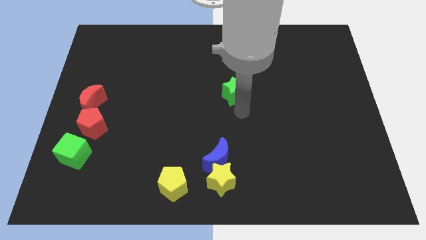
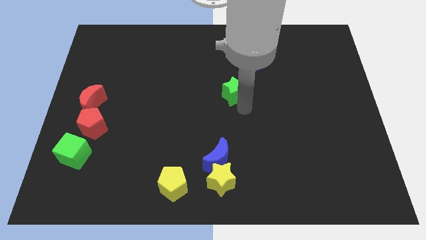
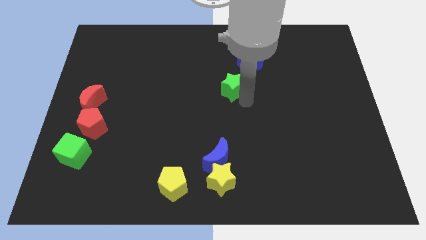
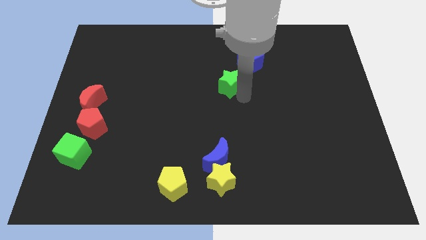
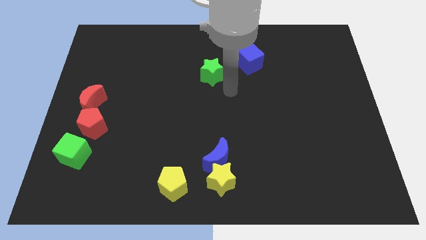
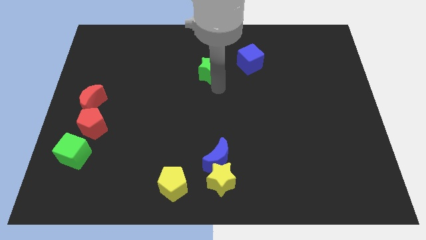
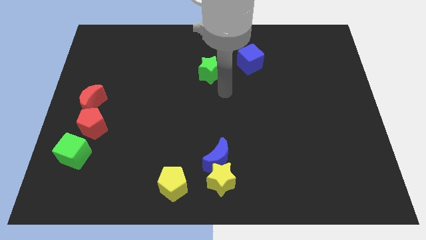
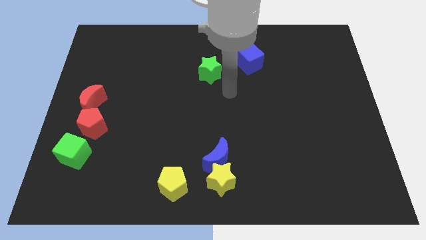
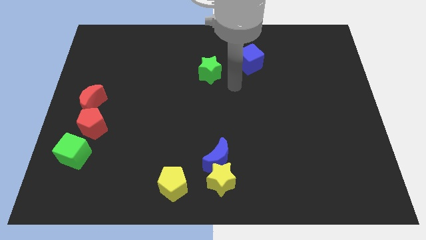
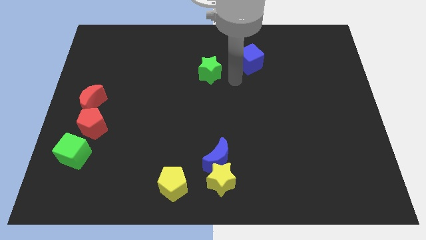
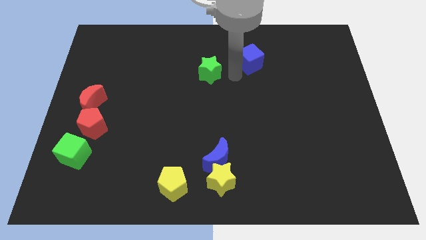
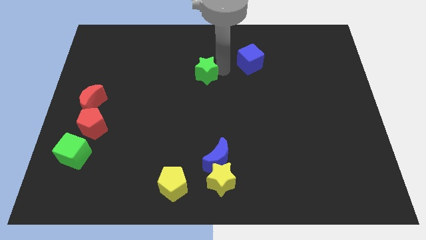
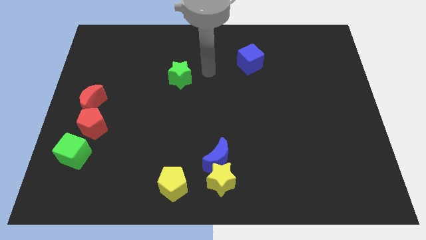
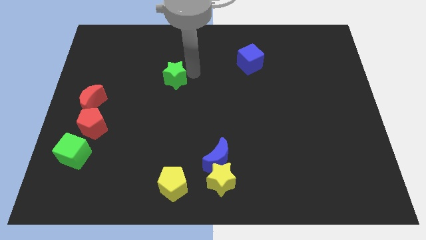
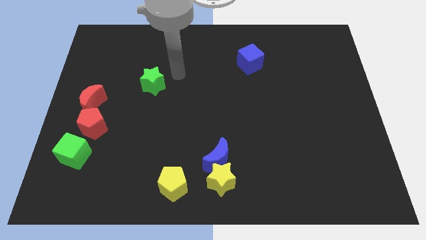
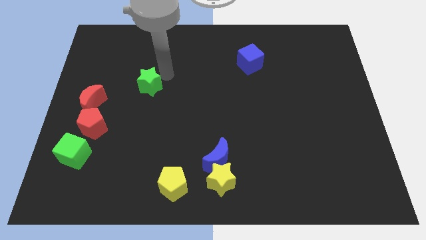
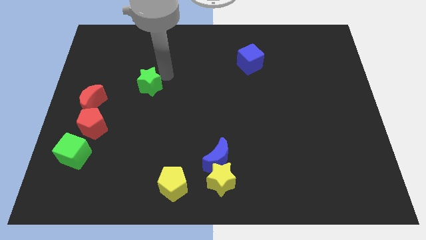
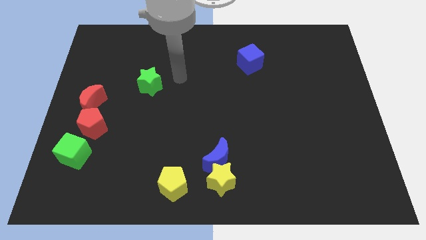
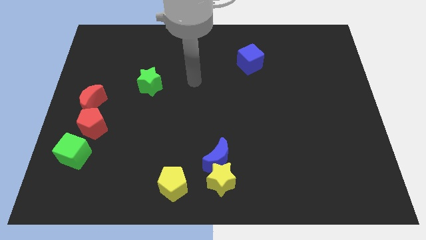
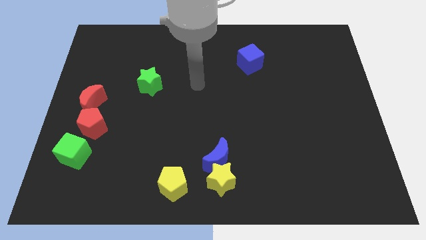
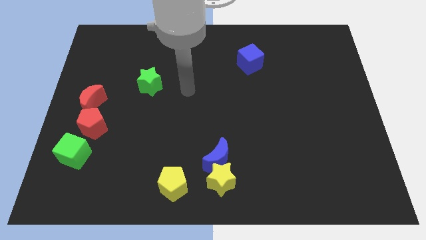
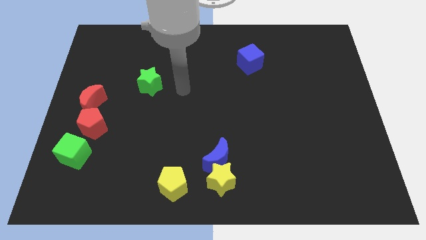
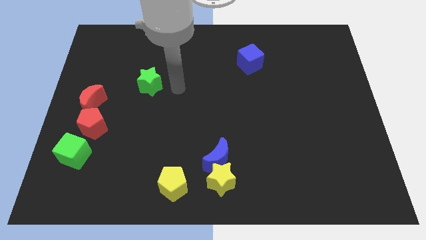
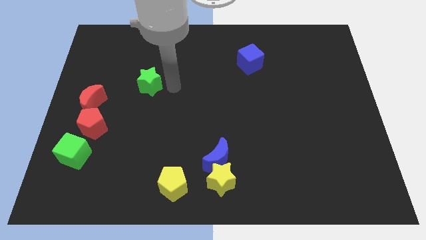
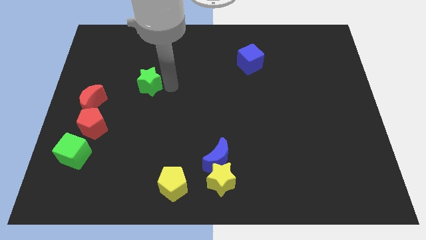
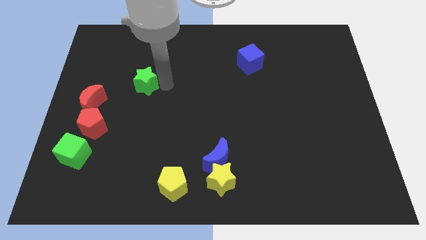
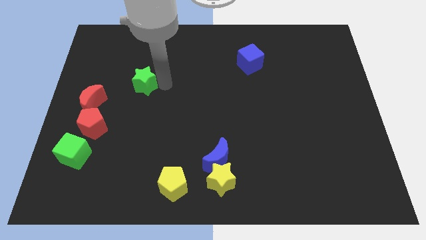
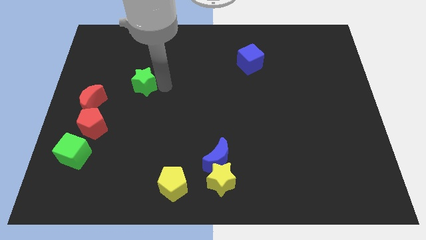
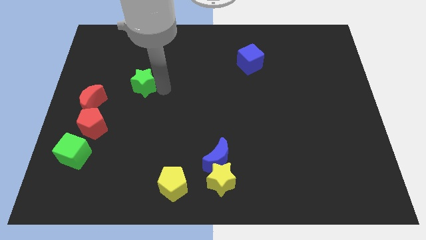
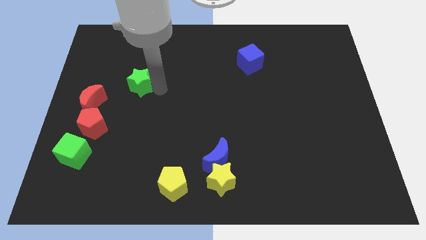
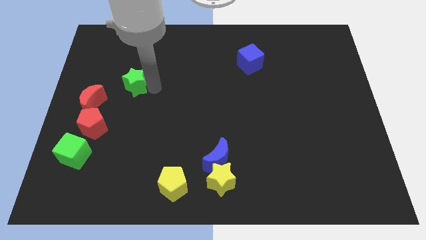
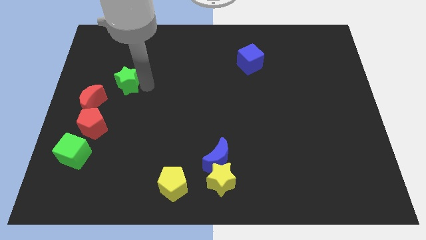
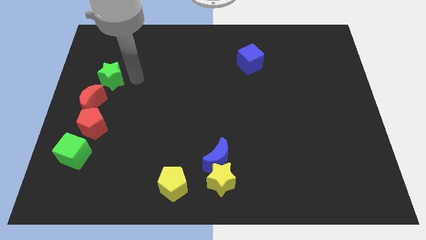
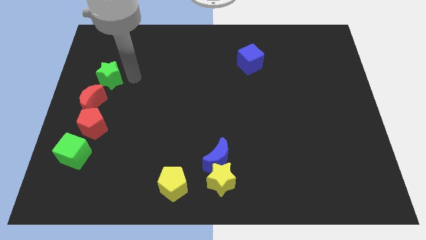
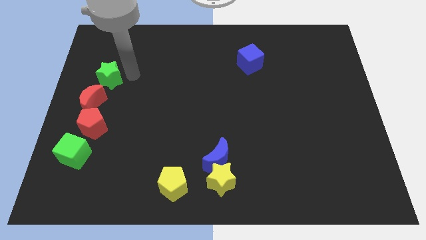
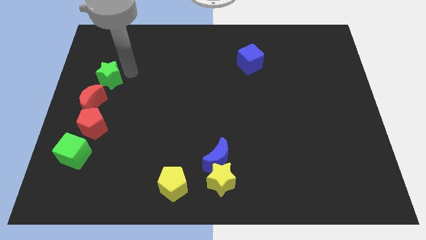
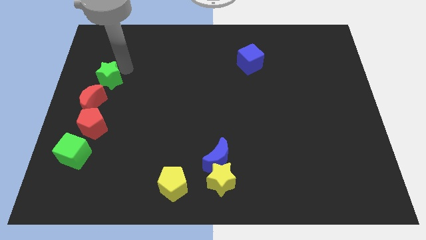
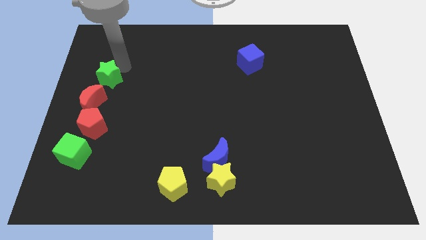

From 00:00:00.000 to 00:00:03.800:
move green star on the top of red crescent

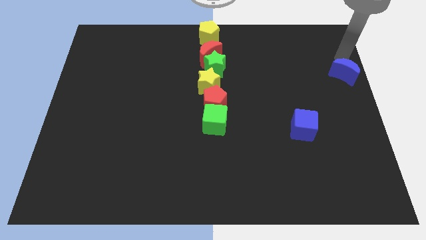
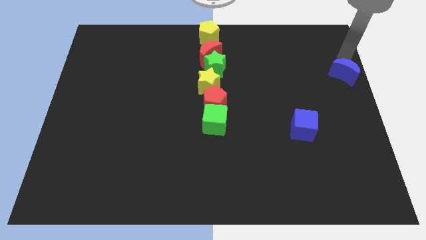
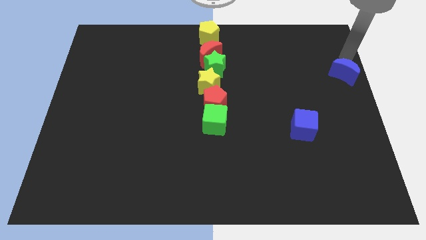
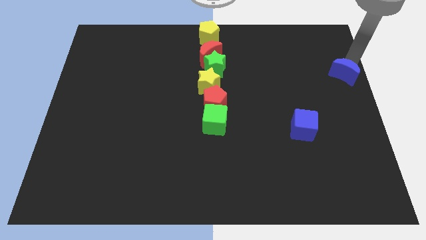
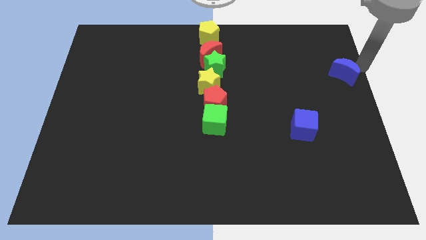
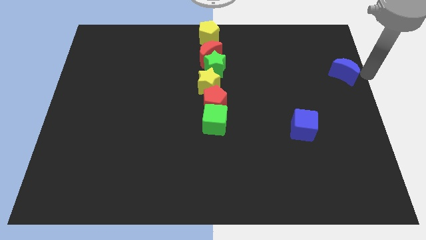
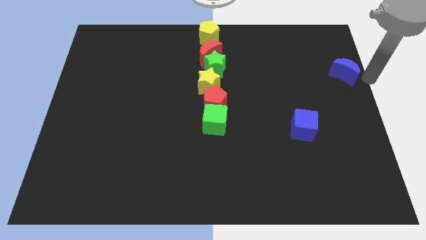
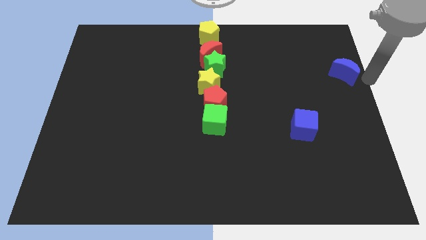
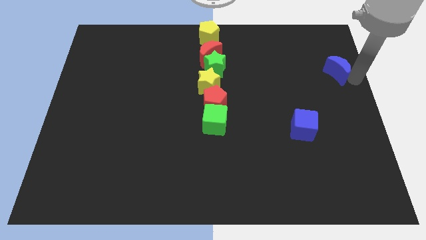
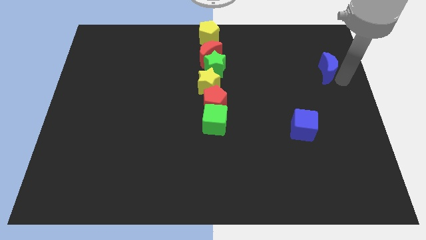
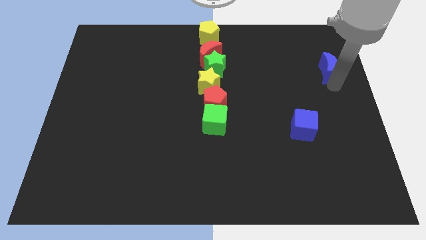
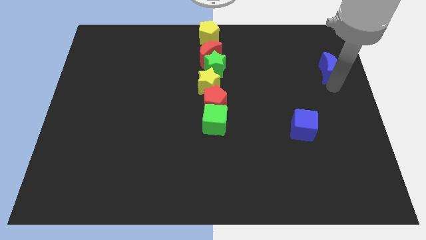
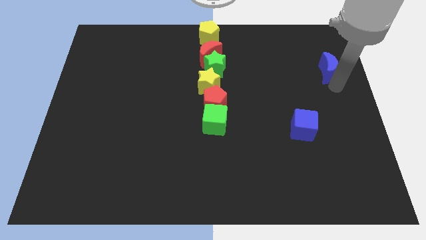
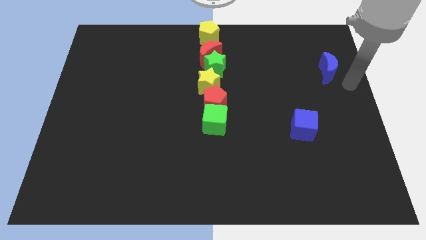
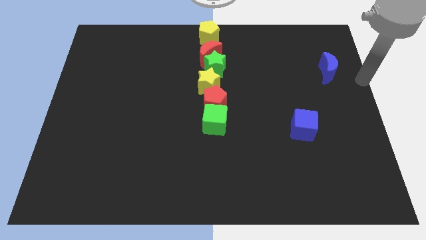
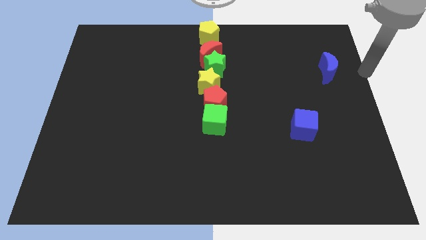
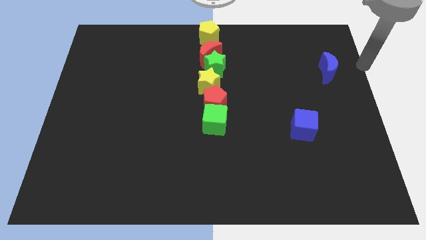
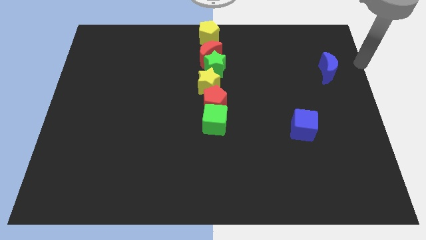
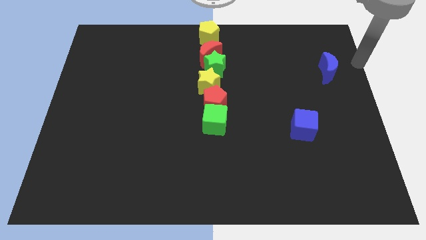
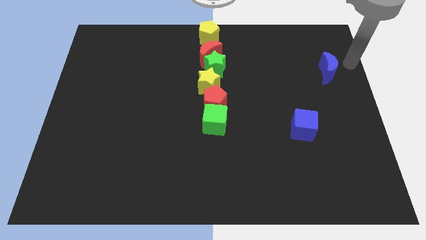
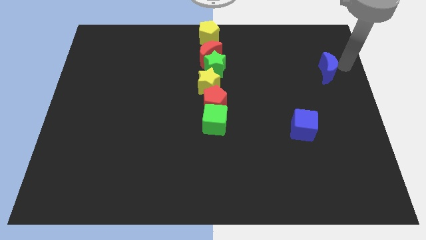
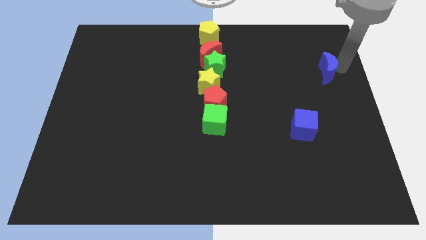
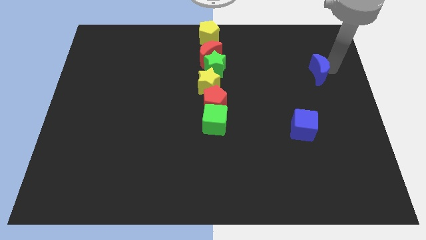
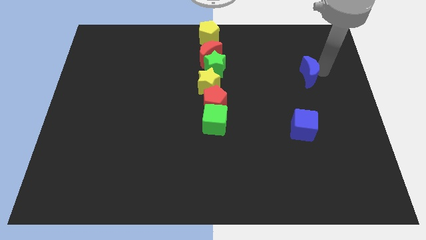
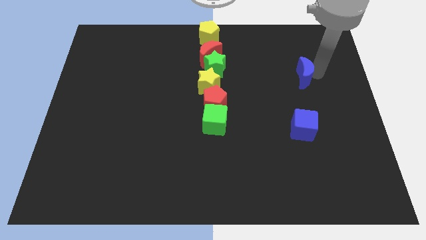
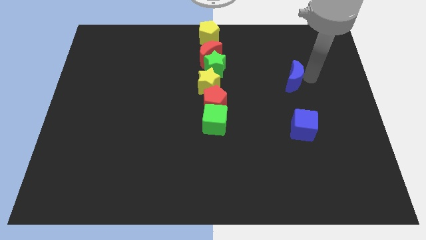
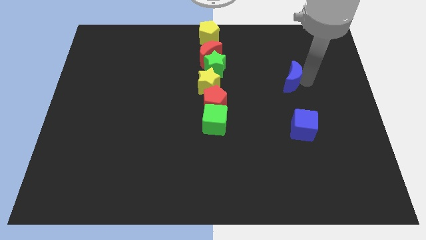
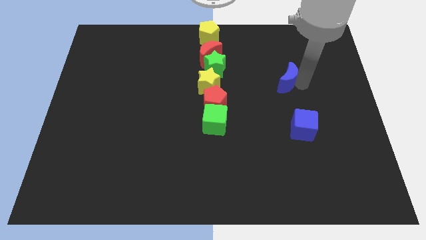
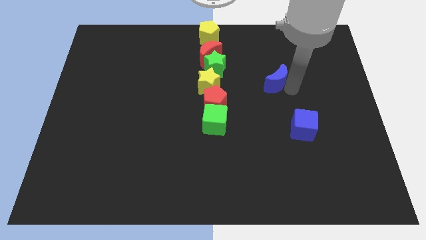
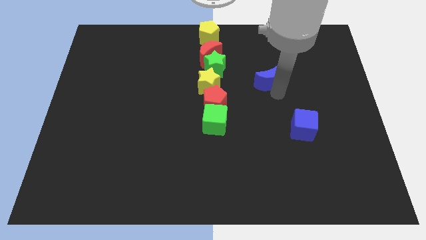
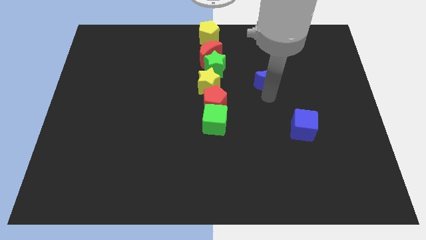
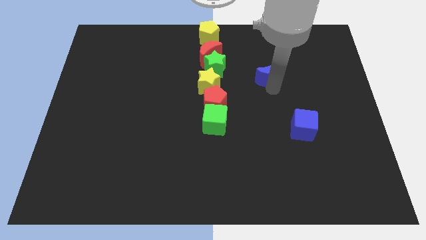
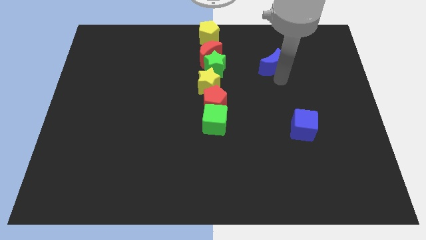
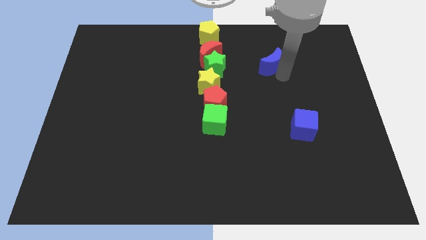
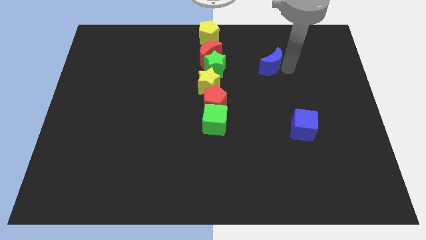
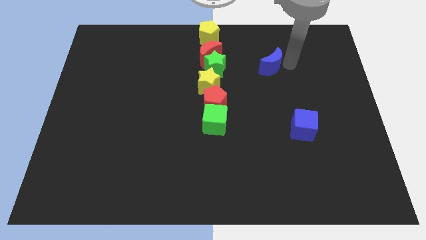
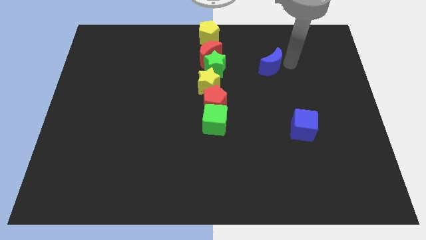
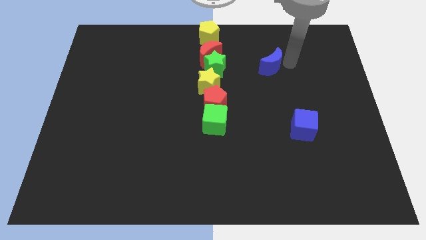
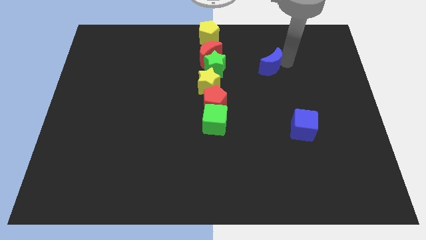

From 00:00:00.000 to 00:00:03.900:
place the blue moon above the blue cube

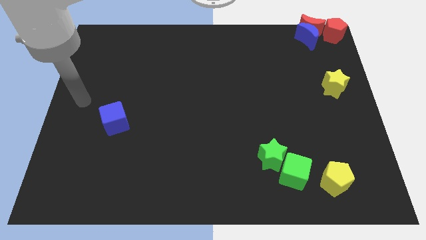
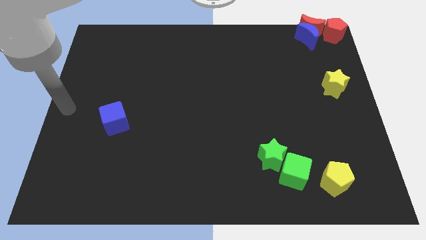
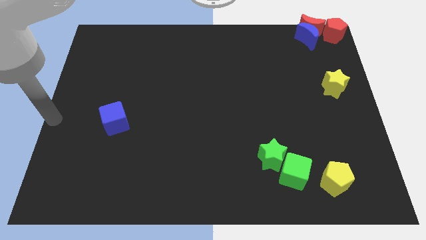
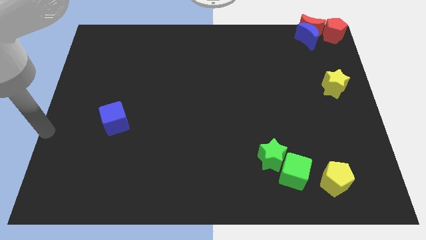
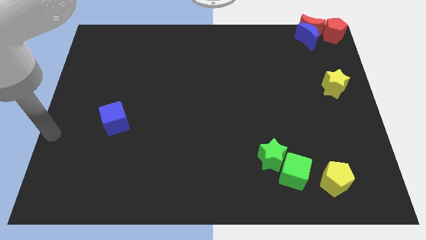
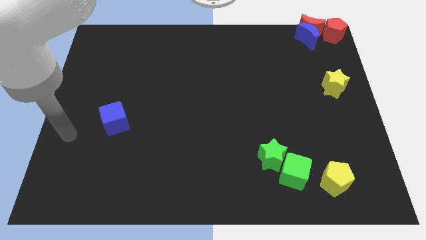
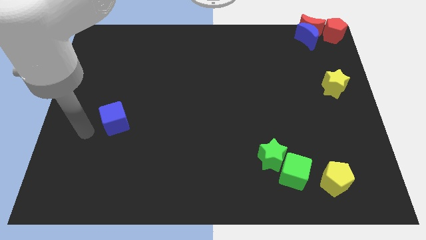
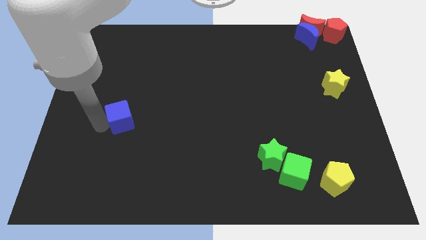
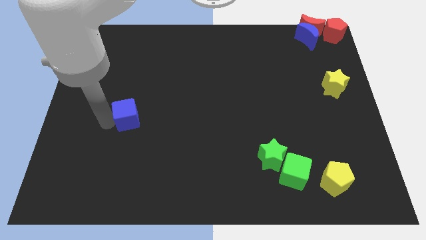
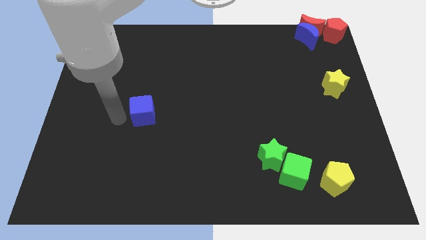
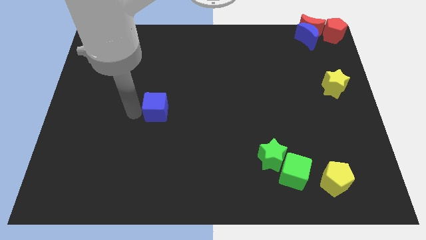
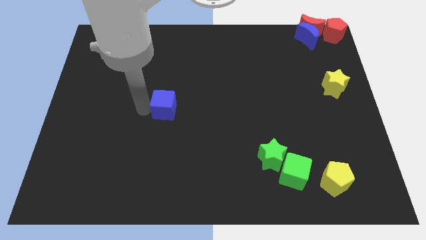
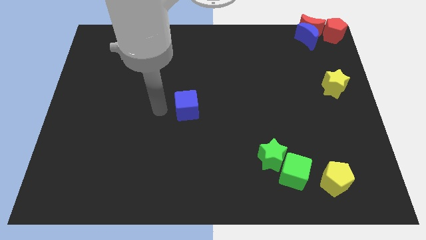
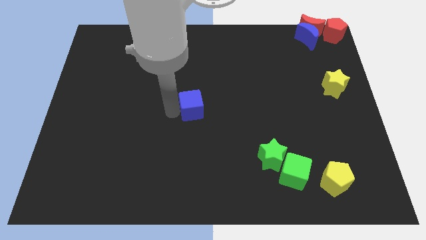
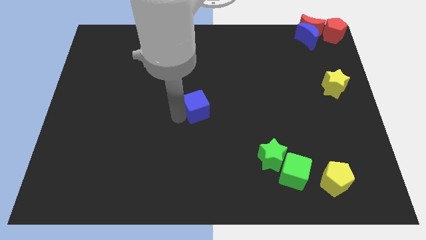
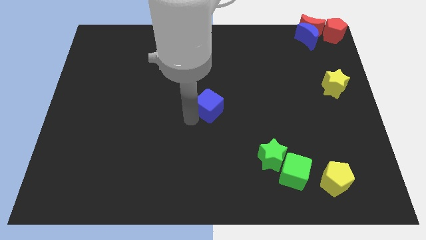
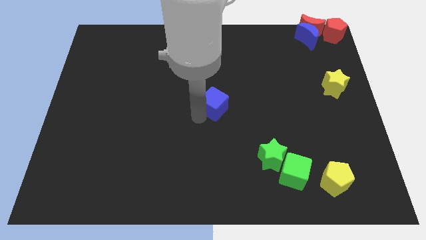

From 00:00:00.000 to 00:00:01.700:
place blue cube to the center of the board
